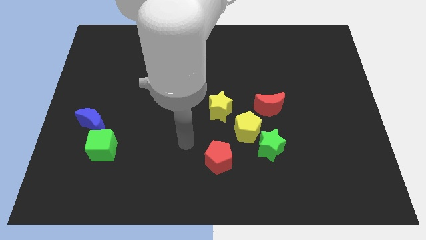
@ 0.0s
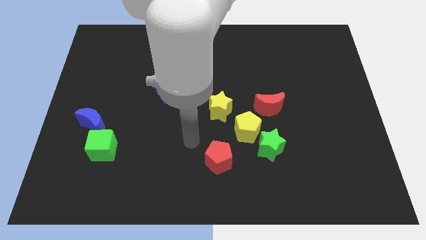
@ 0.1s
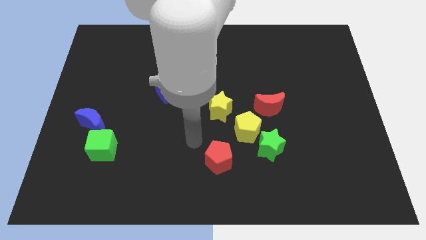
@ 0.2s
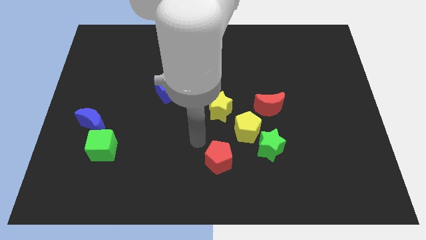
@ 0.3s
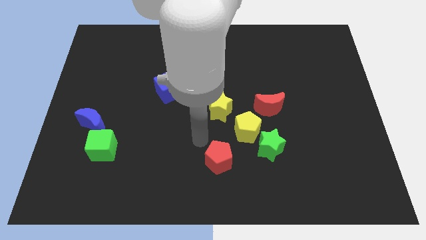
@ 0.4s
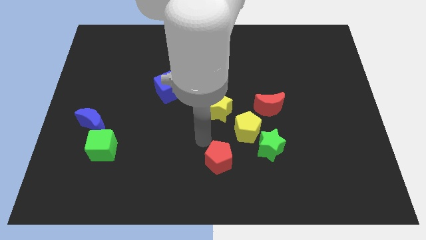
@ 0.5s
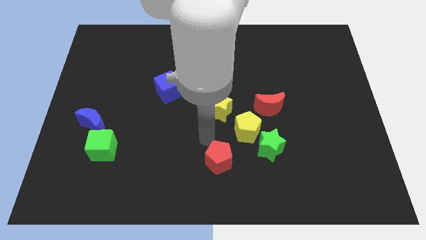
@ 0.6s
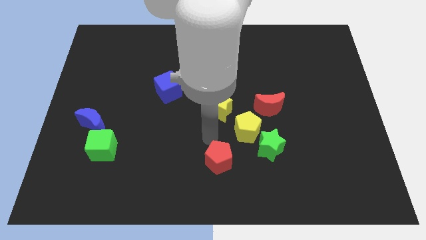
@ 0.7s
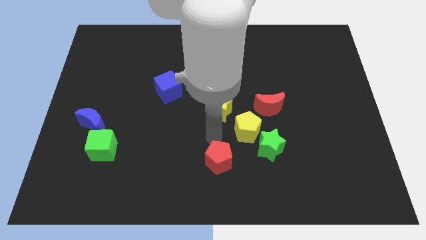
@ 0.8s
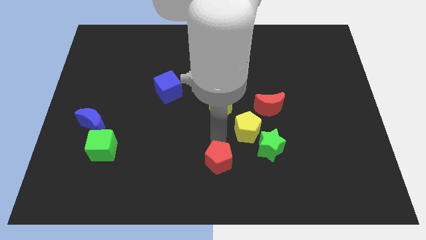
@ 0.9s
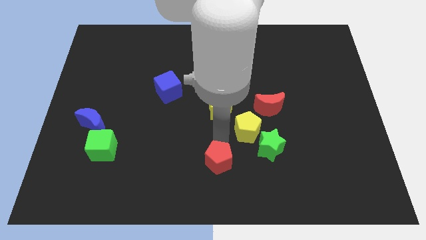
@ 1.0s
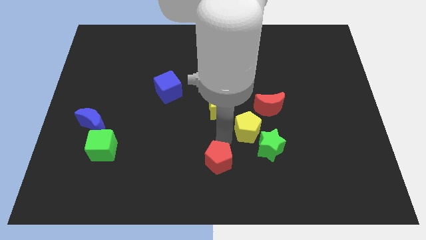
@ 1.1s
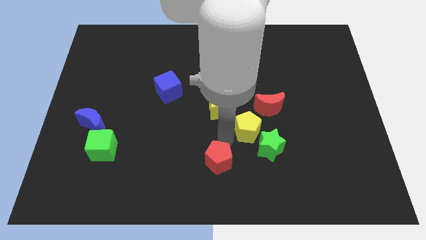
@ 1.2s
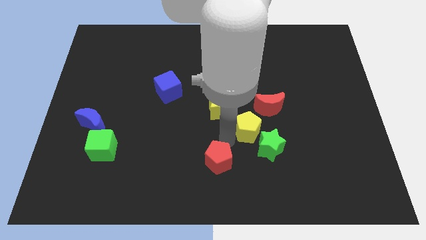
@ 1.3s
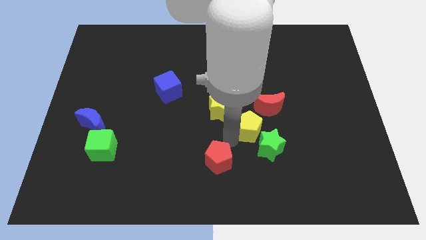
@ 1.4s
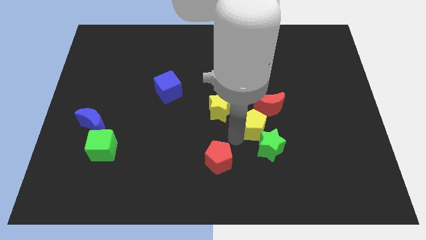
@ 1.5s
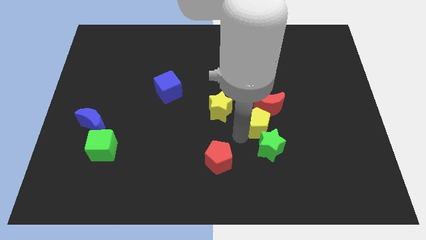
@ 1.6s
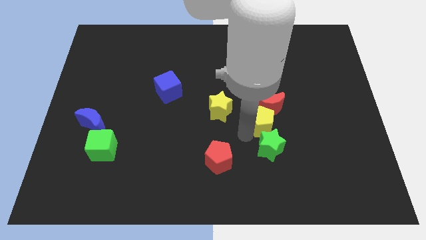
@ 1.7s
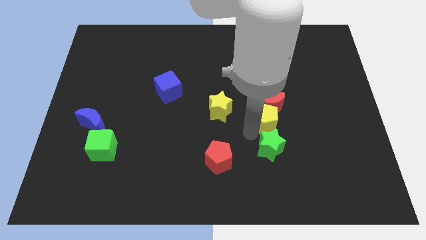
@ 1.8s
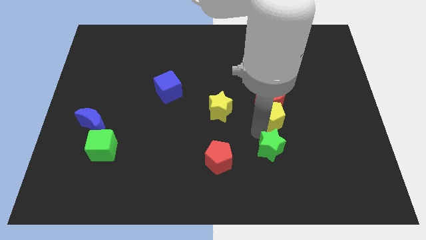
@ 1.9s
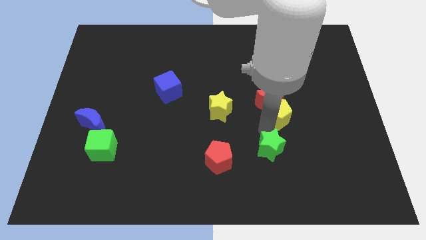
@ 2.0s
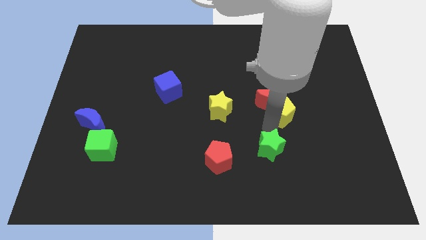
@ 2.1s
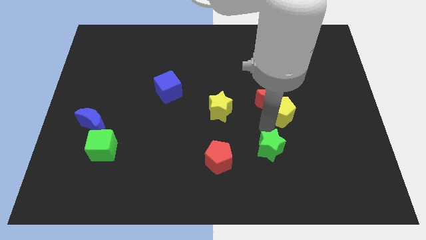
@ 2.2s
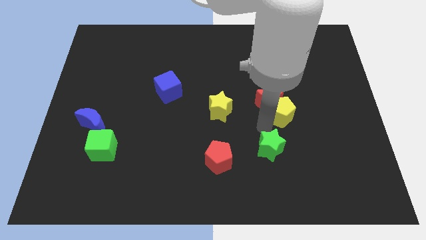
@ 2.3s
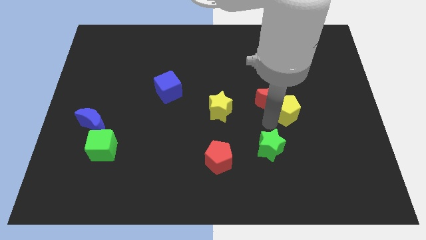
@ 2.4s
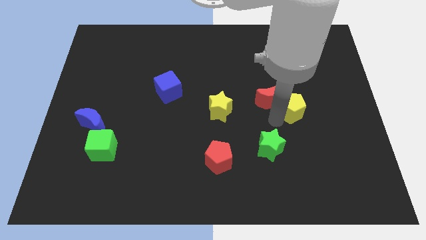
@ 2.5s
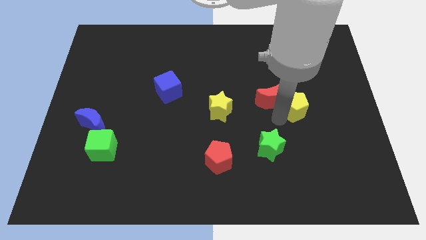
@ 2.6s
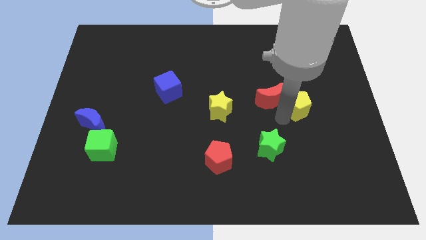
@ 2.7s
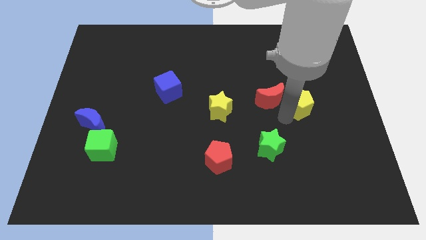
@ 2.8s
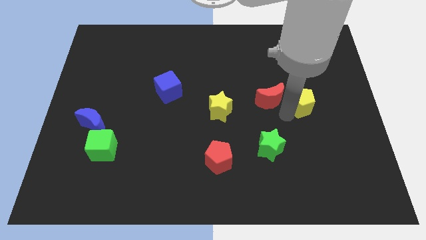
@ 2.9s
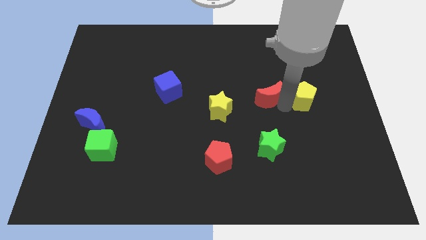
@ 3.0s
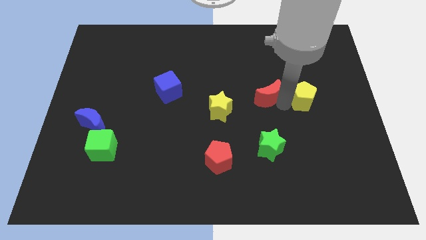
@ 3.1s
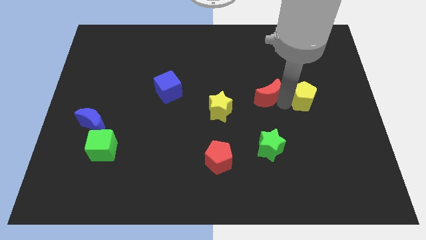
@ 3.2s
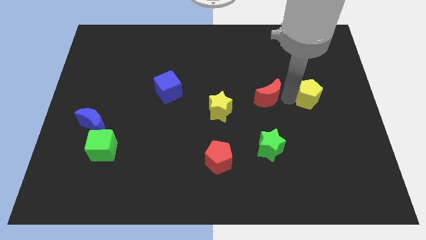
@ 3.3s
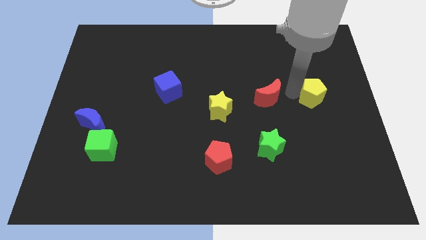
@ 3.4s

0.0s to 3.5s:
push the yellow pentagon to the right of the red moon

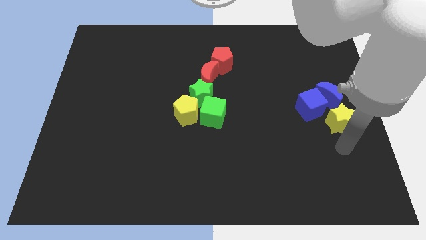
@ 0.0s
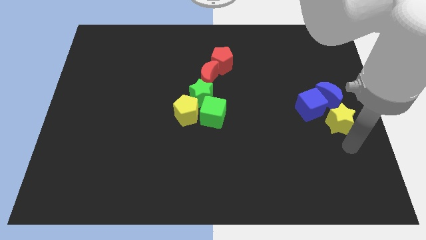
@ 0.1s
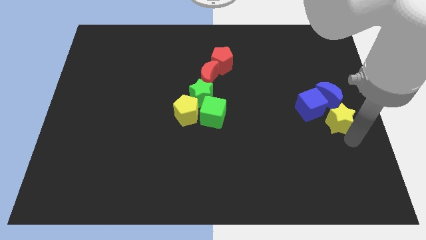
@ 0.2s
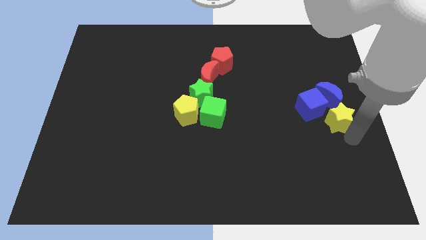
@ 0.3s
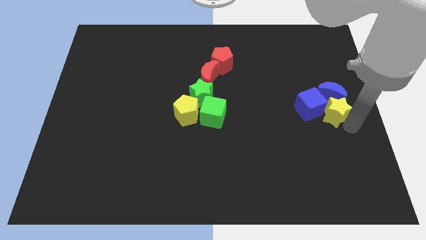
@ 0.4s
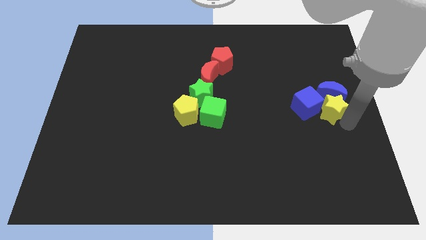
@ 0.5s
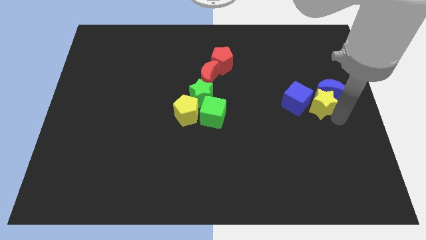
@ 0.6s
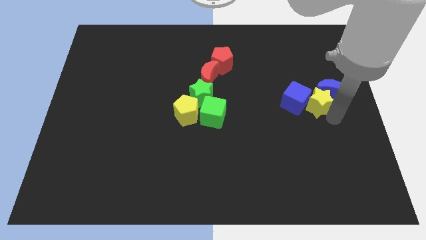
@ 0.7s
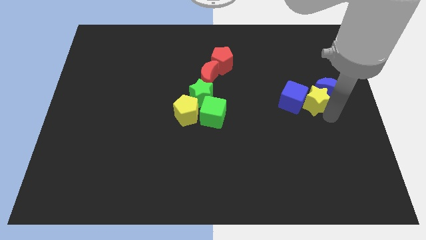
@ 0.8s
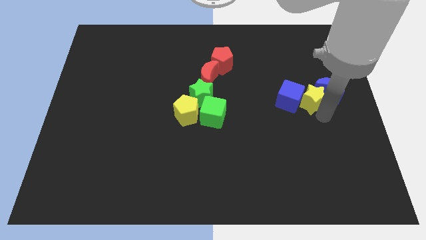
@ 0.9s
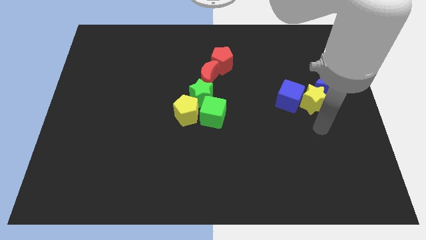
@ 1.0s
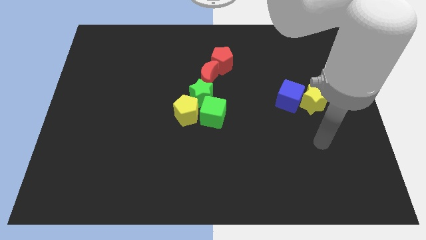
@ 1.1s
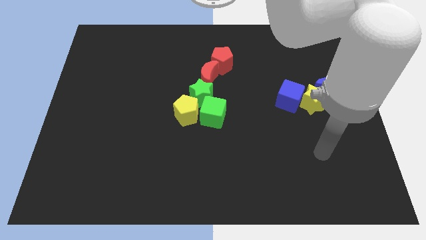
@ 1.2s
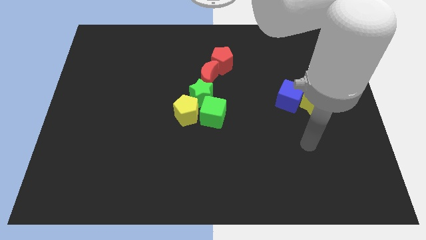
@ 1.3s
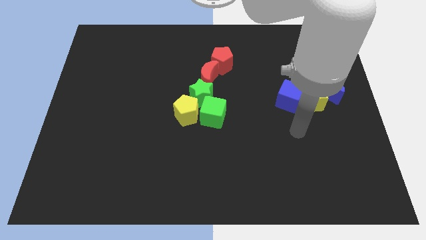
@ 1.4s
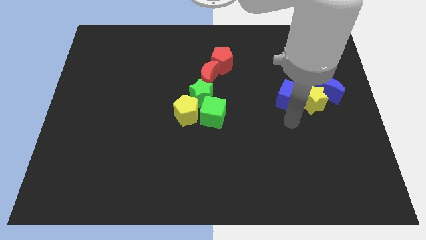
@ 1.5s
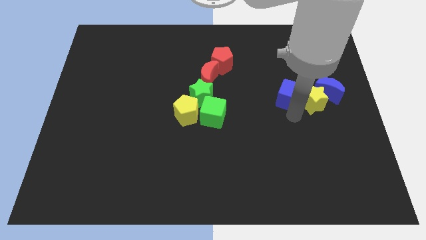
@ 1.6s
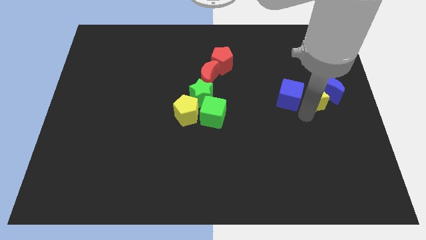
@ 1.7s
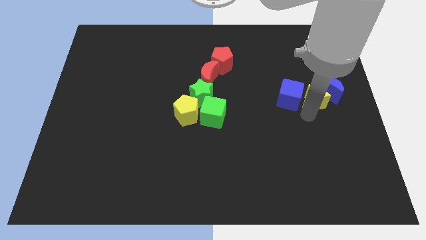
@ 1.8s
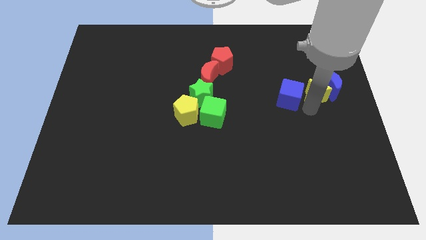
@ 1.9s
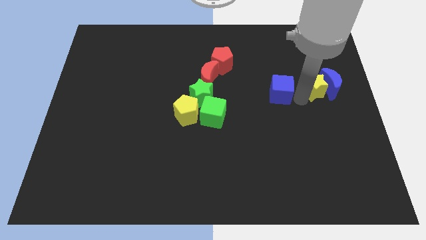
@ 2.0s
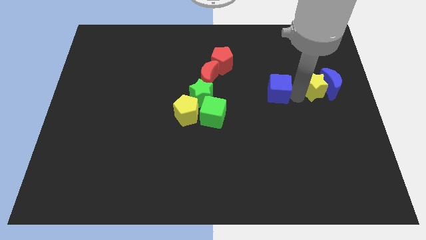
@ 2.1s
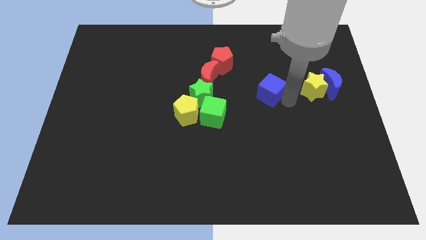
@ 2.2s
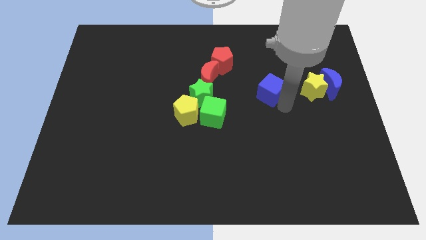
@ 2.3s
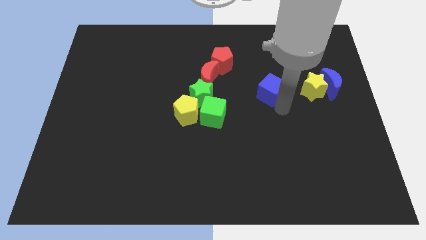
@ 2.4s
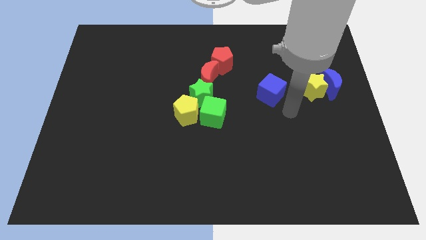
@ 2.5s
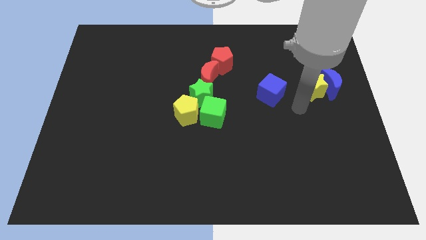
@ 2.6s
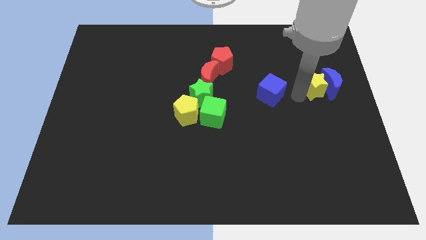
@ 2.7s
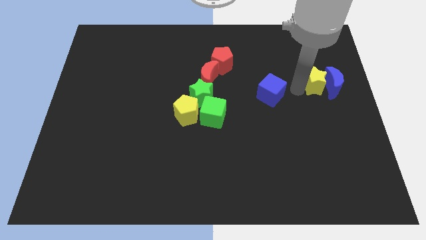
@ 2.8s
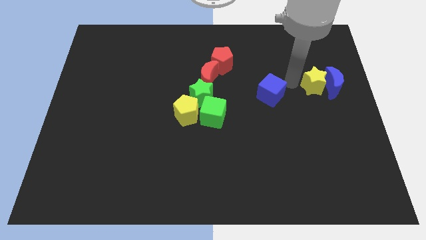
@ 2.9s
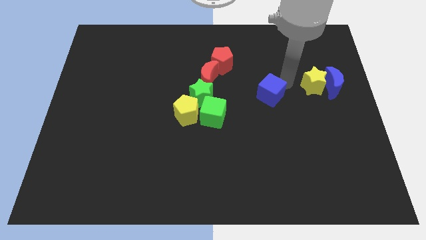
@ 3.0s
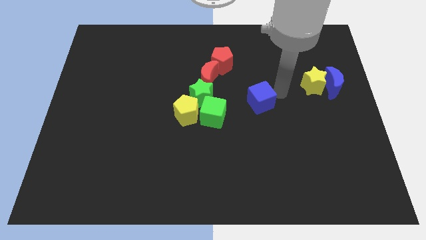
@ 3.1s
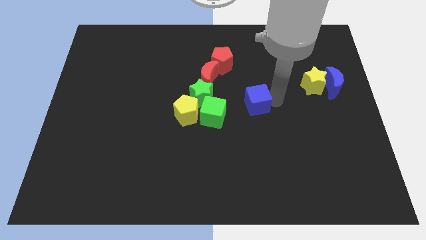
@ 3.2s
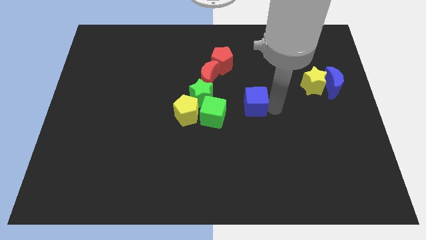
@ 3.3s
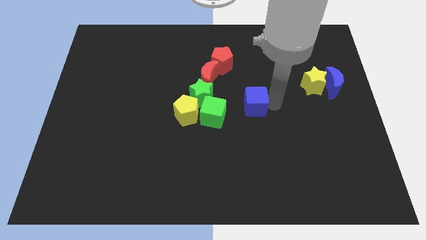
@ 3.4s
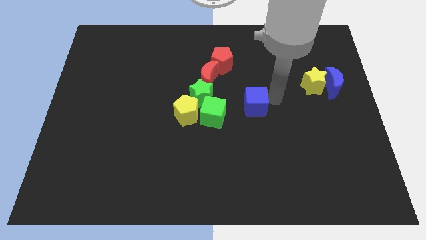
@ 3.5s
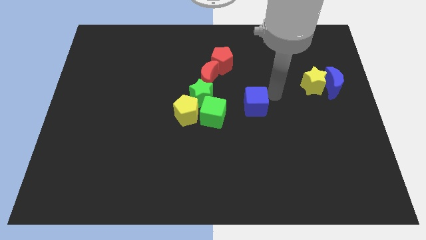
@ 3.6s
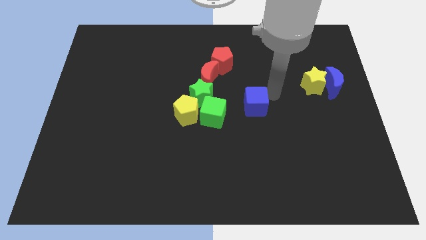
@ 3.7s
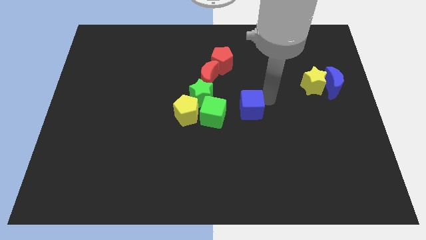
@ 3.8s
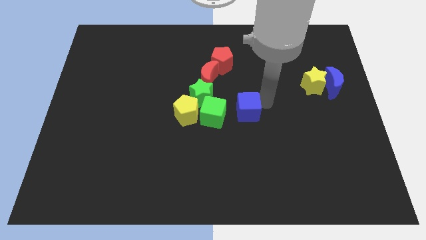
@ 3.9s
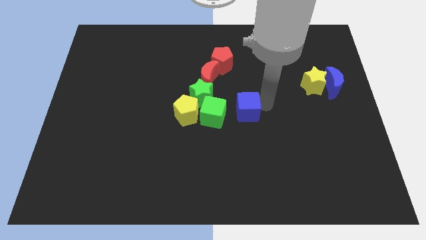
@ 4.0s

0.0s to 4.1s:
move the blue cube to the right side of the green cube

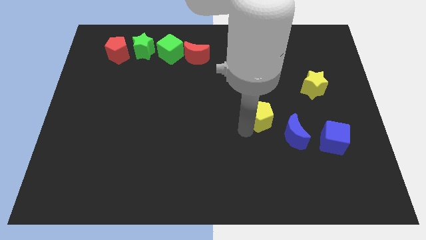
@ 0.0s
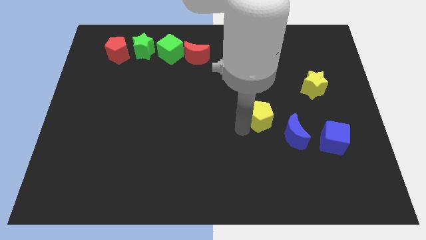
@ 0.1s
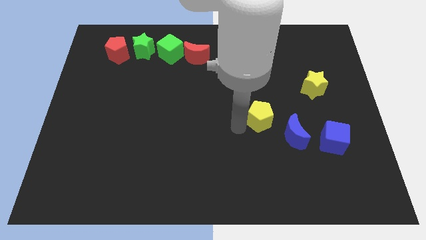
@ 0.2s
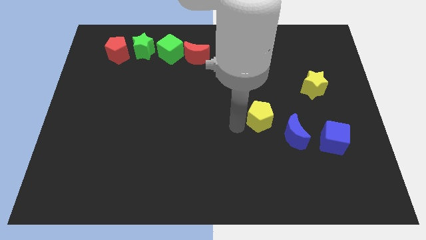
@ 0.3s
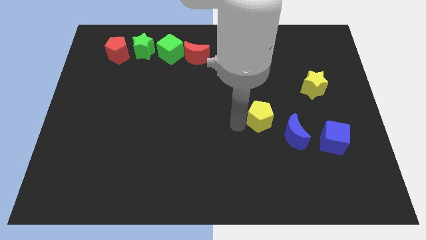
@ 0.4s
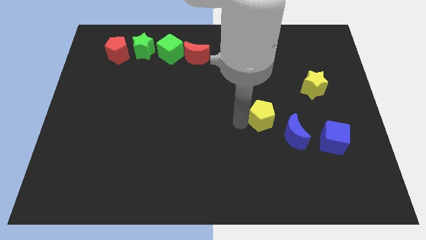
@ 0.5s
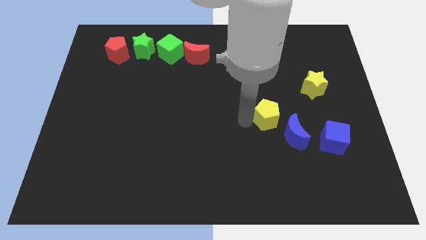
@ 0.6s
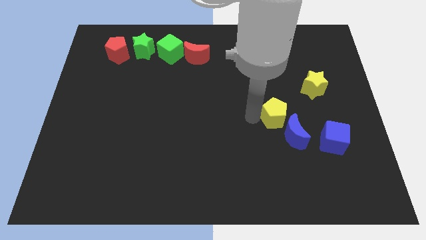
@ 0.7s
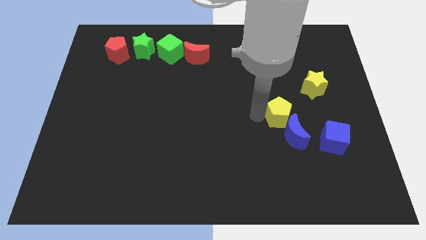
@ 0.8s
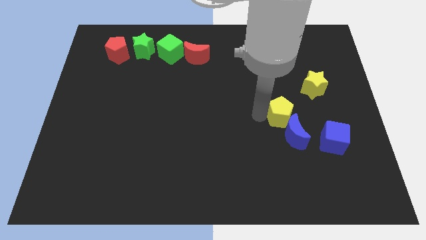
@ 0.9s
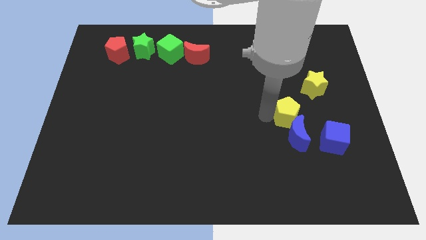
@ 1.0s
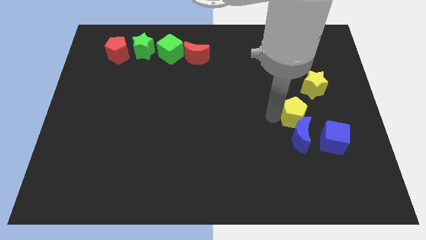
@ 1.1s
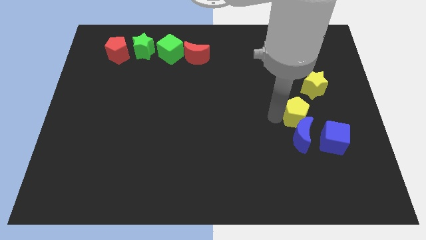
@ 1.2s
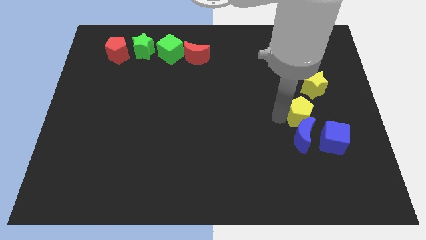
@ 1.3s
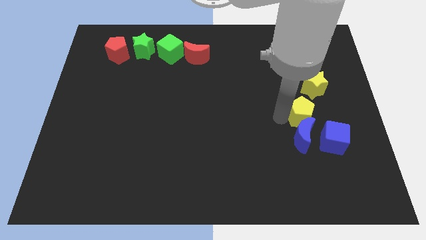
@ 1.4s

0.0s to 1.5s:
push the yellow pentagon into the blue moon
